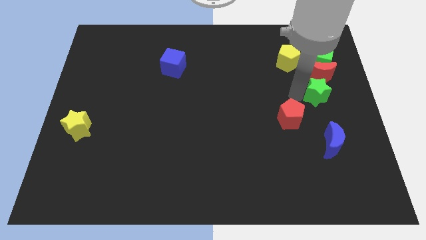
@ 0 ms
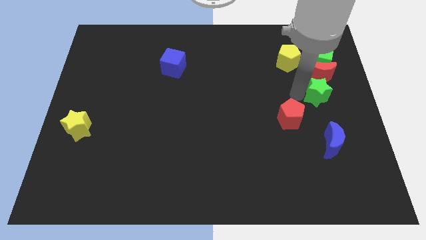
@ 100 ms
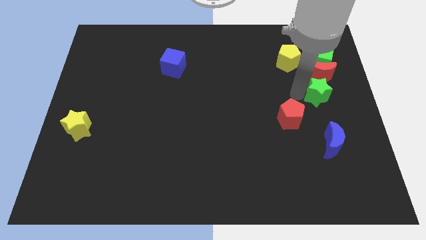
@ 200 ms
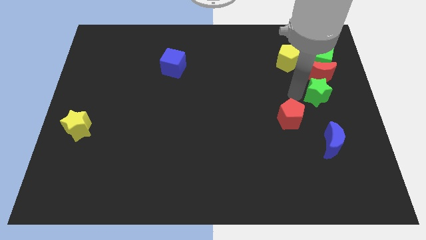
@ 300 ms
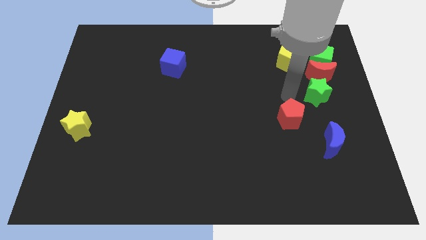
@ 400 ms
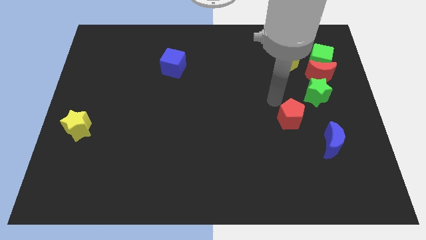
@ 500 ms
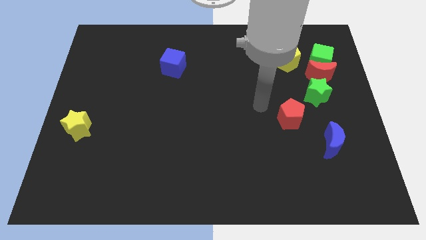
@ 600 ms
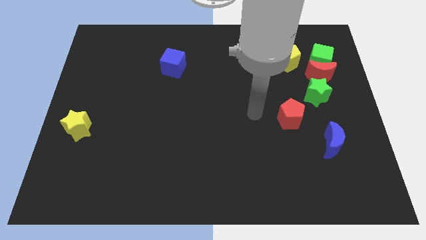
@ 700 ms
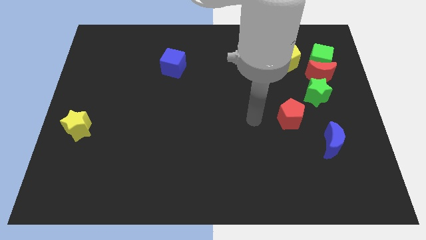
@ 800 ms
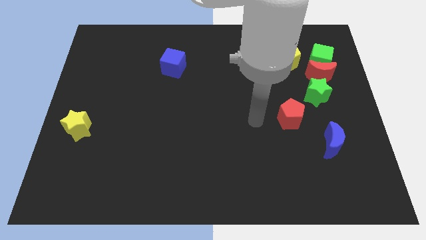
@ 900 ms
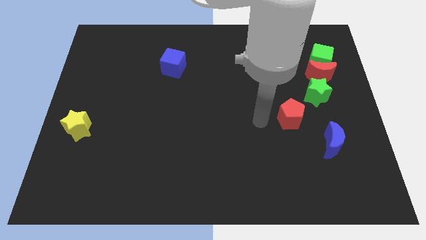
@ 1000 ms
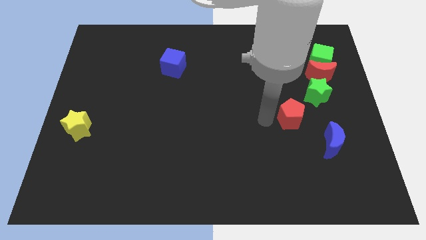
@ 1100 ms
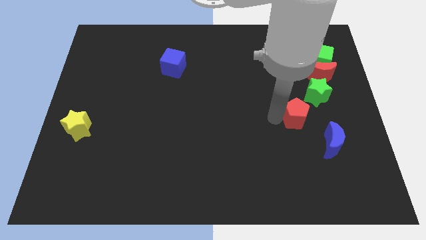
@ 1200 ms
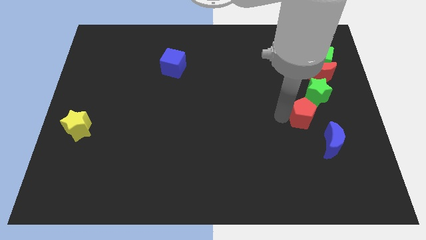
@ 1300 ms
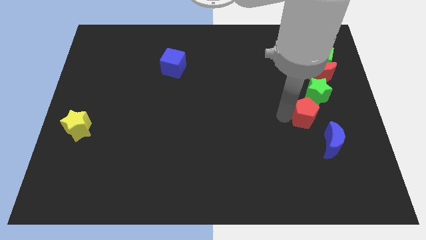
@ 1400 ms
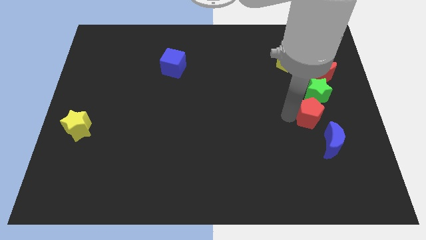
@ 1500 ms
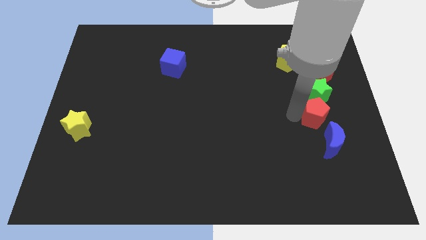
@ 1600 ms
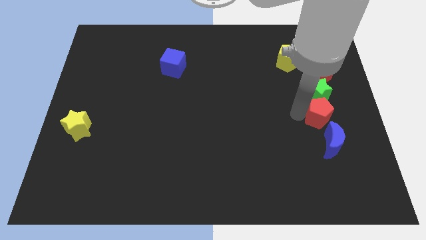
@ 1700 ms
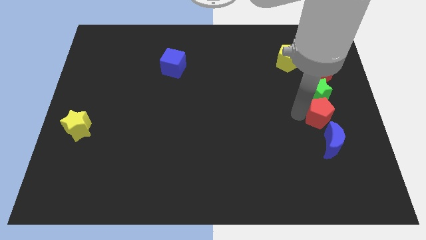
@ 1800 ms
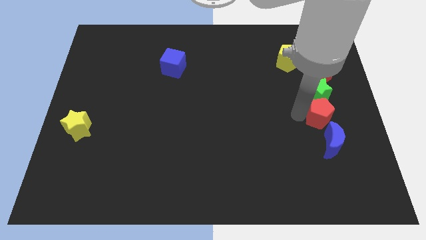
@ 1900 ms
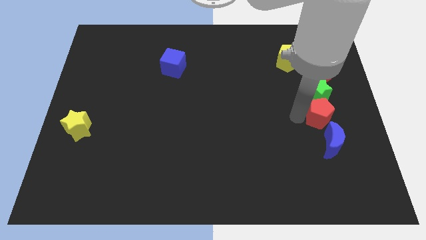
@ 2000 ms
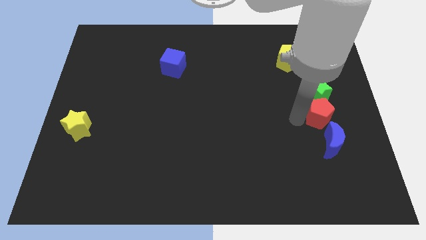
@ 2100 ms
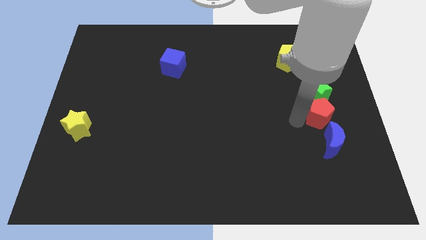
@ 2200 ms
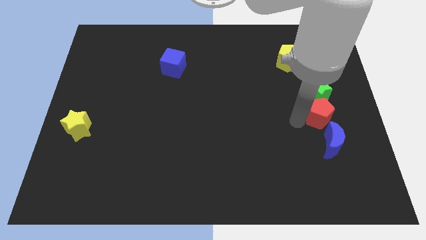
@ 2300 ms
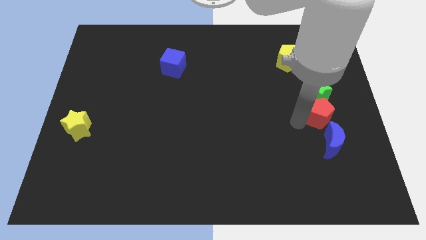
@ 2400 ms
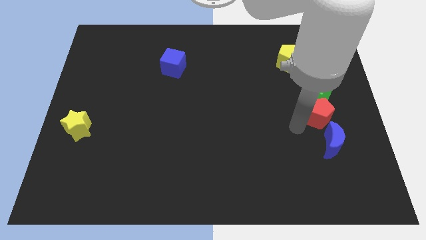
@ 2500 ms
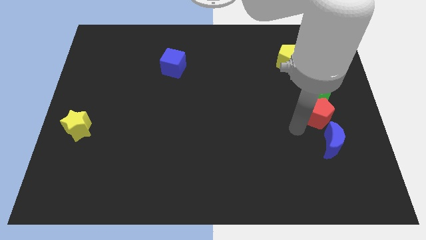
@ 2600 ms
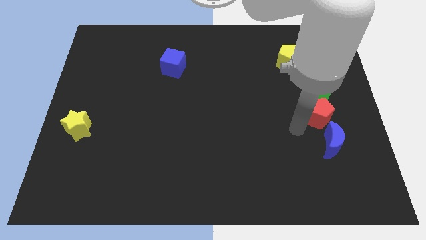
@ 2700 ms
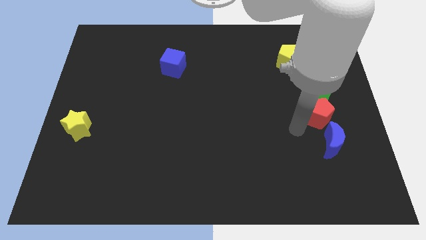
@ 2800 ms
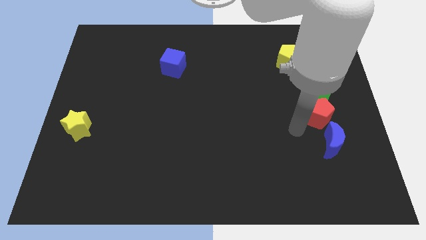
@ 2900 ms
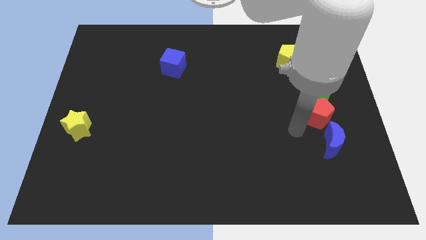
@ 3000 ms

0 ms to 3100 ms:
move the red pentagon to the centre of the blue moon and green star

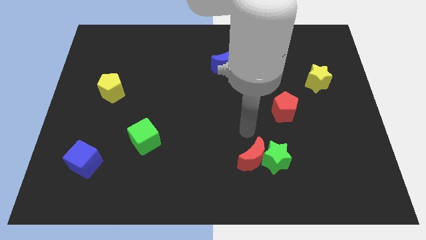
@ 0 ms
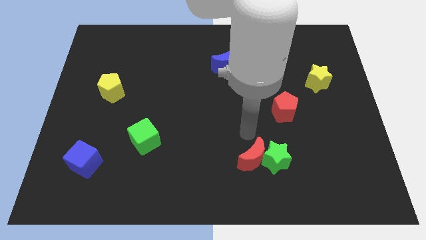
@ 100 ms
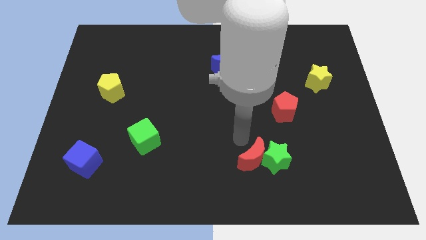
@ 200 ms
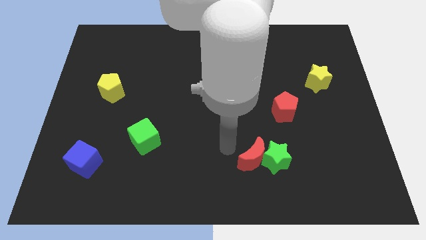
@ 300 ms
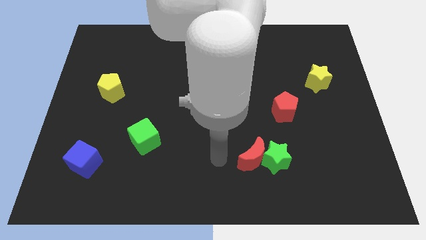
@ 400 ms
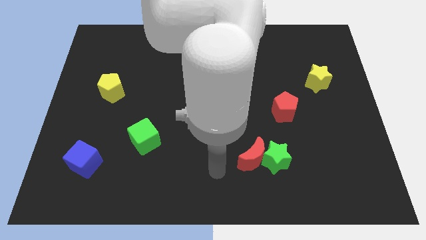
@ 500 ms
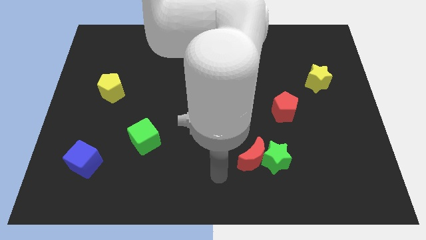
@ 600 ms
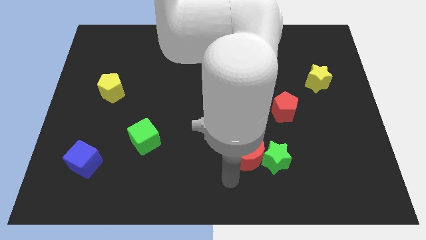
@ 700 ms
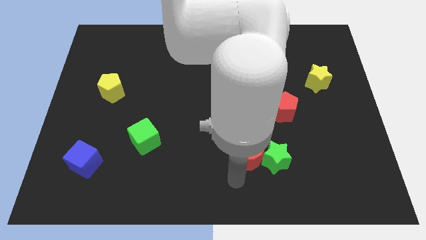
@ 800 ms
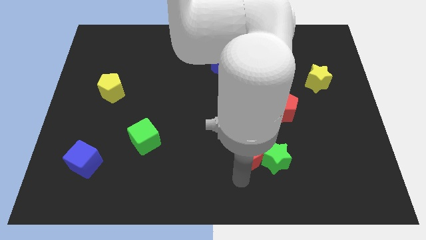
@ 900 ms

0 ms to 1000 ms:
move your ram below red crescent

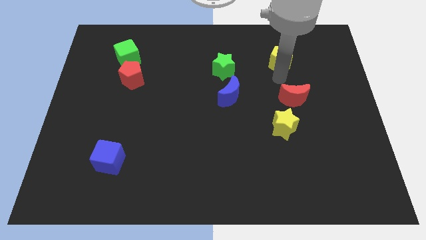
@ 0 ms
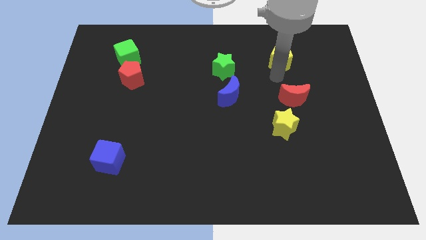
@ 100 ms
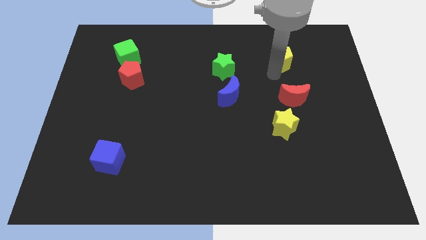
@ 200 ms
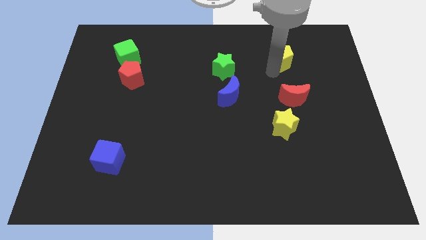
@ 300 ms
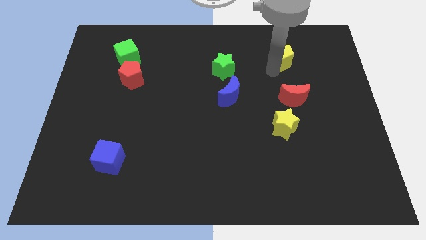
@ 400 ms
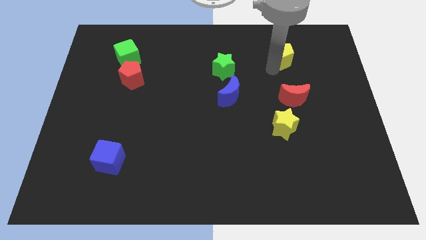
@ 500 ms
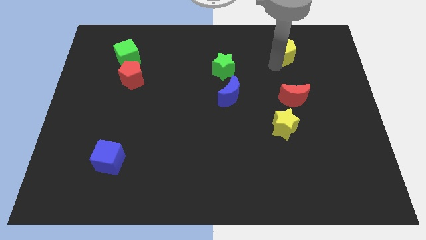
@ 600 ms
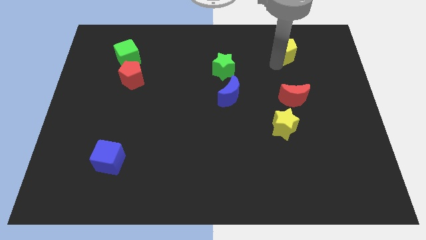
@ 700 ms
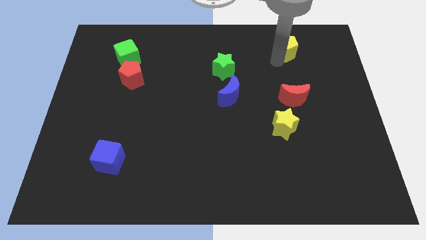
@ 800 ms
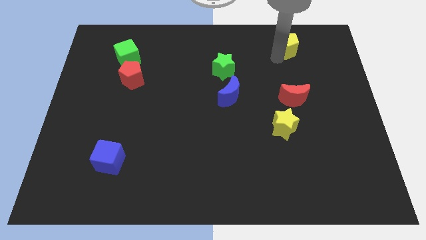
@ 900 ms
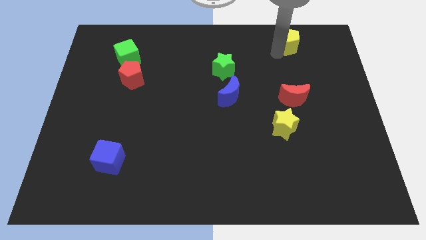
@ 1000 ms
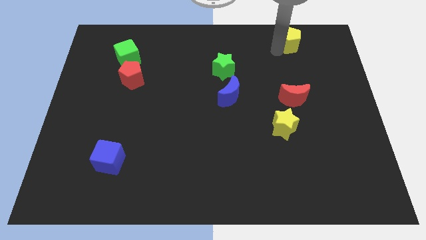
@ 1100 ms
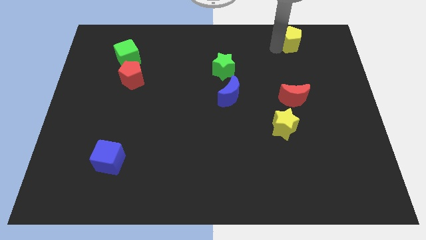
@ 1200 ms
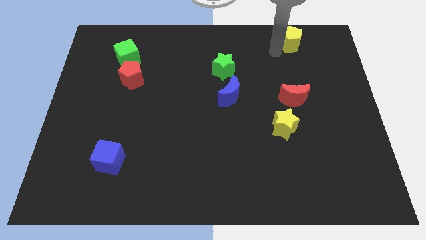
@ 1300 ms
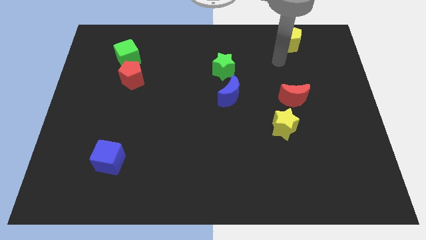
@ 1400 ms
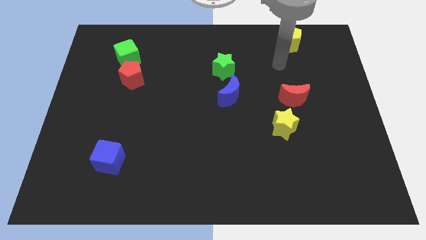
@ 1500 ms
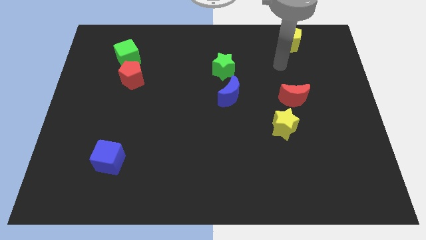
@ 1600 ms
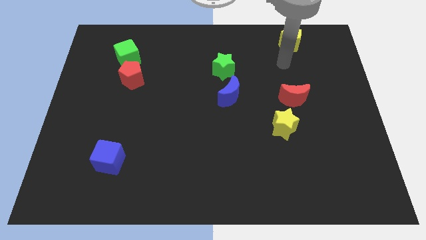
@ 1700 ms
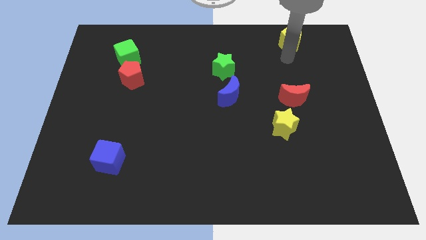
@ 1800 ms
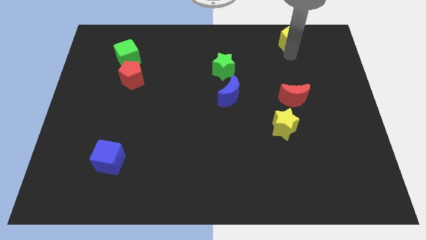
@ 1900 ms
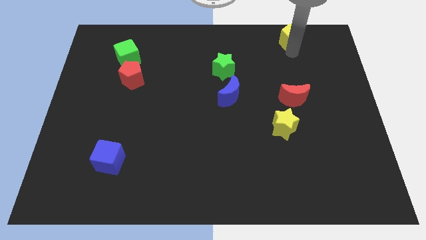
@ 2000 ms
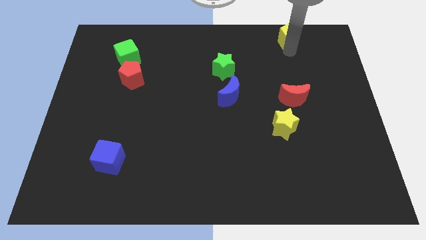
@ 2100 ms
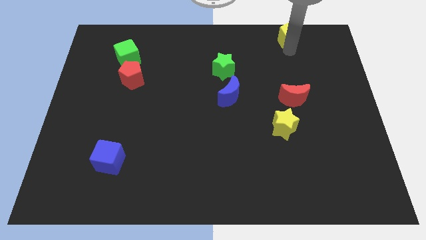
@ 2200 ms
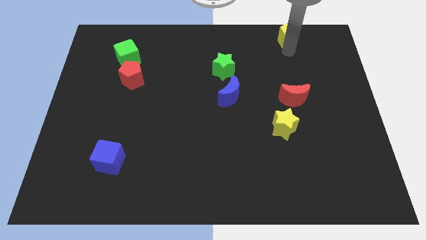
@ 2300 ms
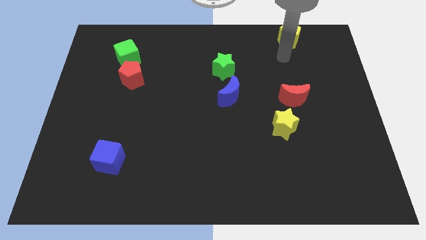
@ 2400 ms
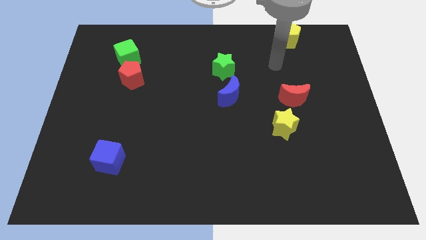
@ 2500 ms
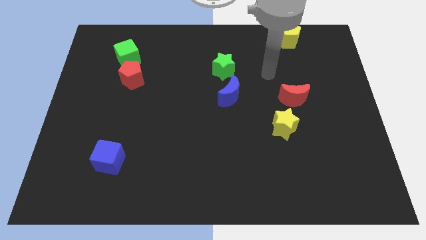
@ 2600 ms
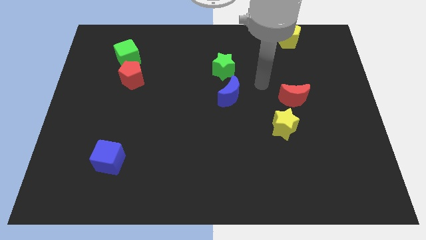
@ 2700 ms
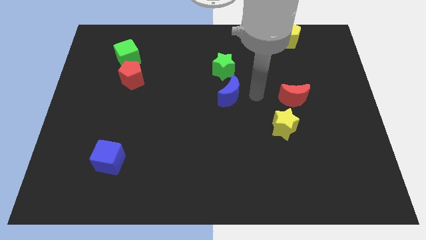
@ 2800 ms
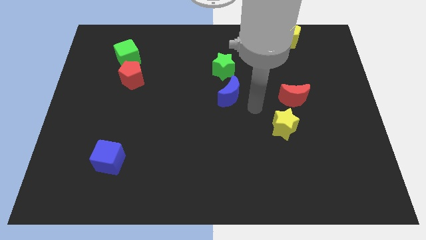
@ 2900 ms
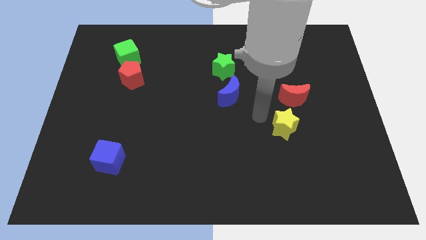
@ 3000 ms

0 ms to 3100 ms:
push the yellow pentagon to the top of the board

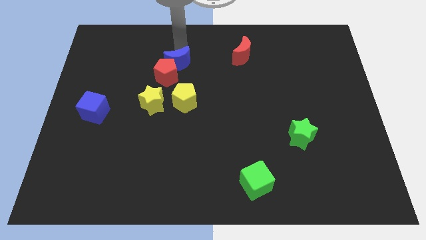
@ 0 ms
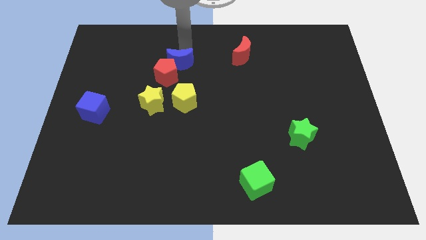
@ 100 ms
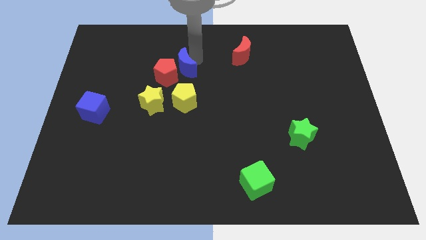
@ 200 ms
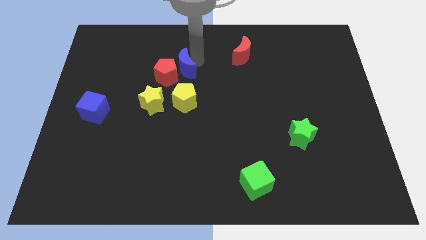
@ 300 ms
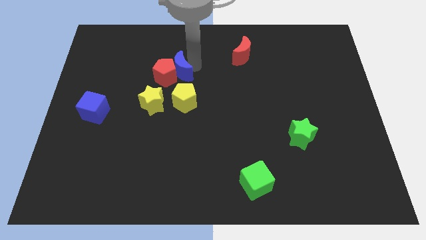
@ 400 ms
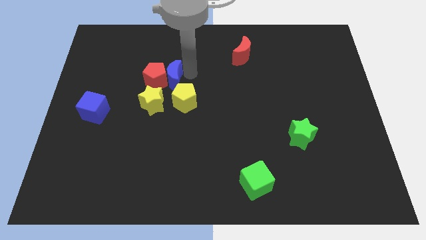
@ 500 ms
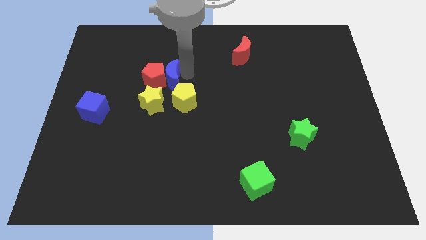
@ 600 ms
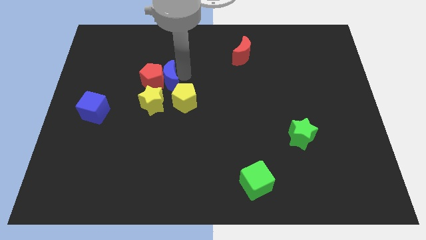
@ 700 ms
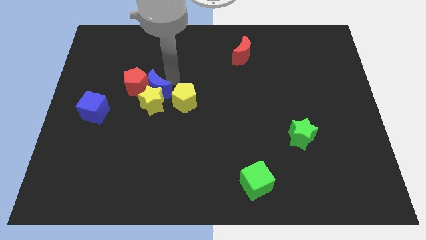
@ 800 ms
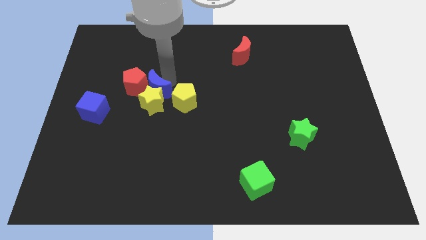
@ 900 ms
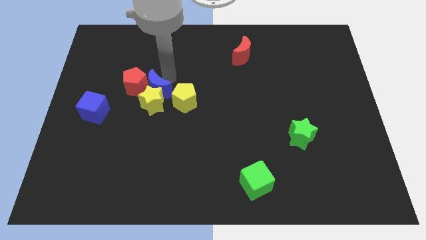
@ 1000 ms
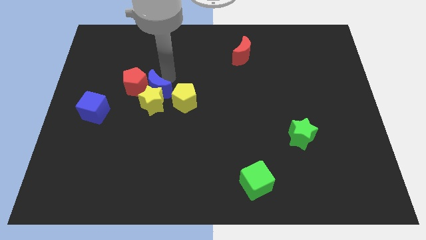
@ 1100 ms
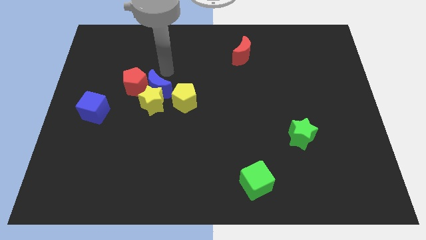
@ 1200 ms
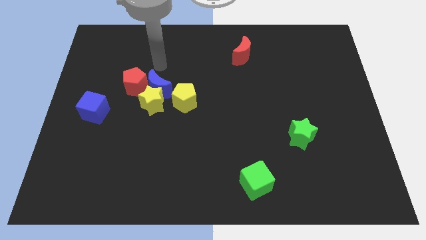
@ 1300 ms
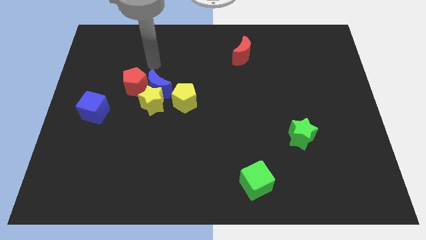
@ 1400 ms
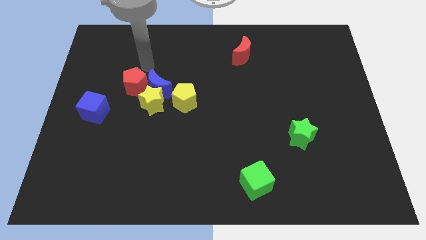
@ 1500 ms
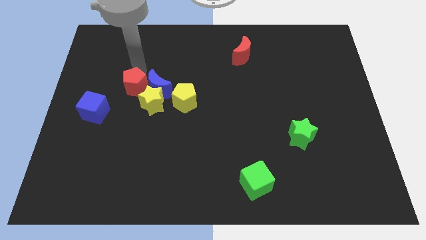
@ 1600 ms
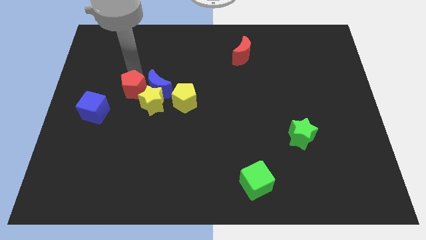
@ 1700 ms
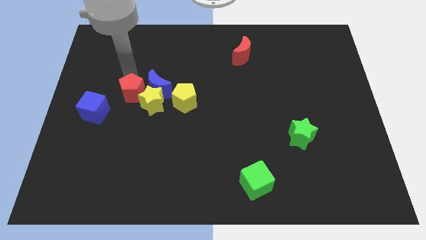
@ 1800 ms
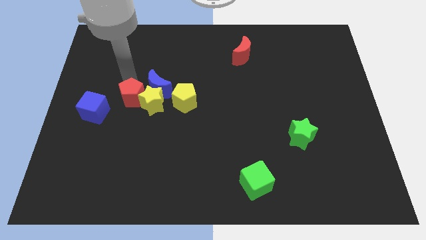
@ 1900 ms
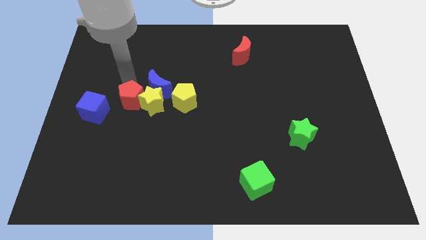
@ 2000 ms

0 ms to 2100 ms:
push the red pentagon into the yellow star
